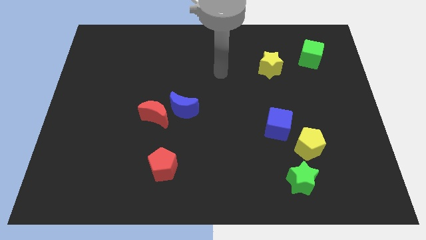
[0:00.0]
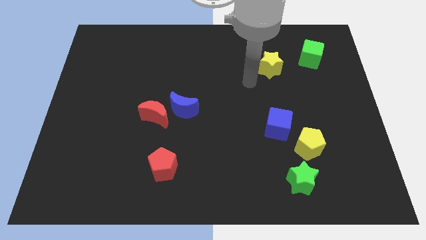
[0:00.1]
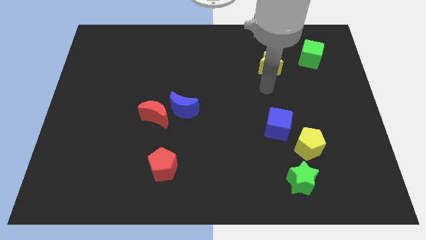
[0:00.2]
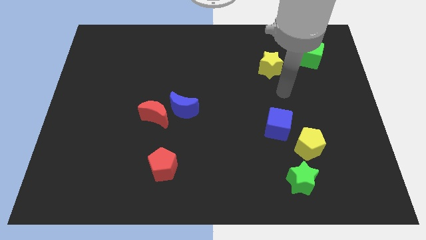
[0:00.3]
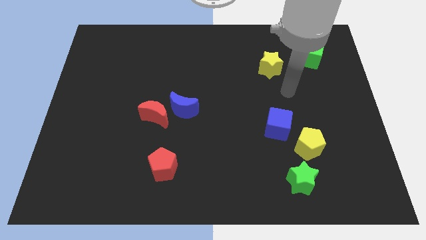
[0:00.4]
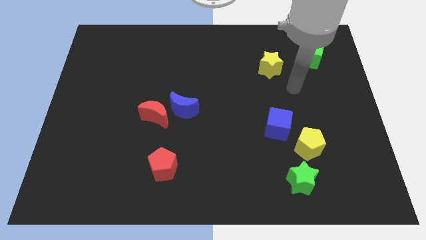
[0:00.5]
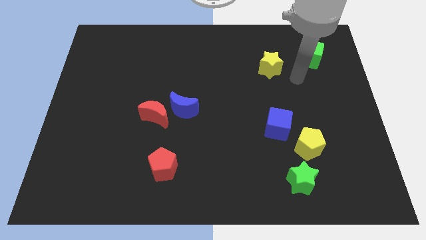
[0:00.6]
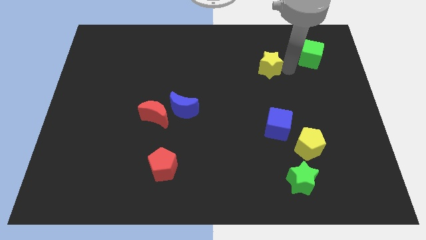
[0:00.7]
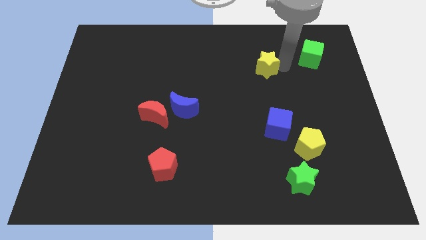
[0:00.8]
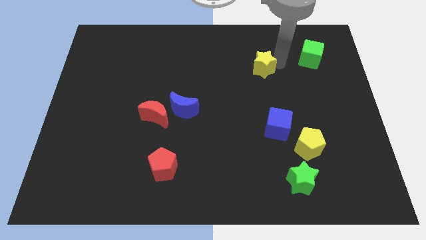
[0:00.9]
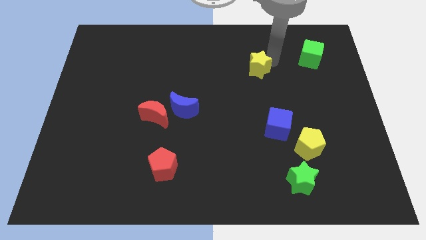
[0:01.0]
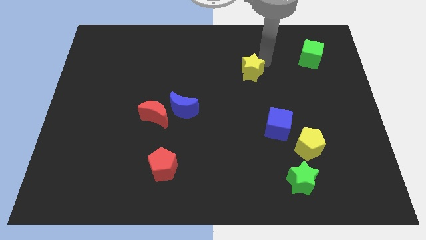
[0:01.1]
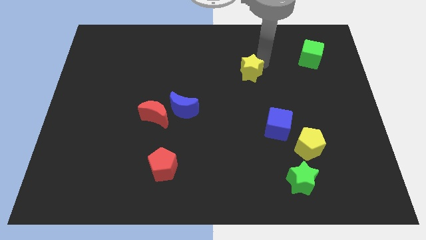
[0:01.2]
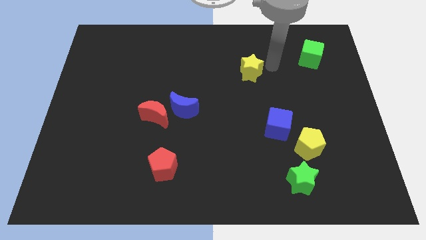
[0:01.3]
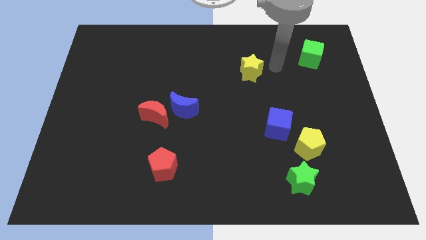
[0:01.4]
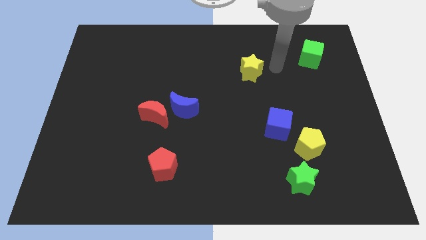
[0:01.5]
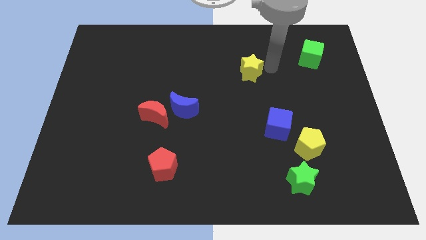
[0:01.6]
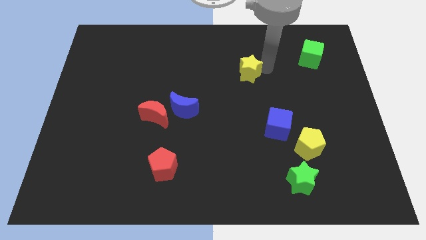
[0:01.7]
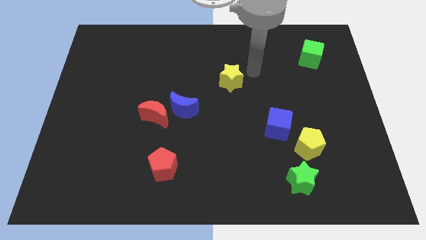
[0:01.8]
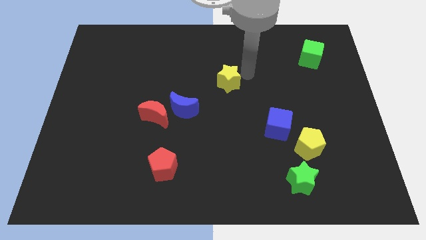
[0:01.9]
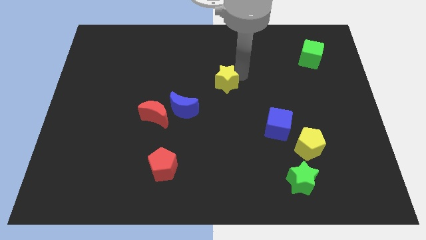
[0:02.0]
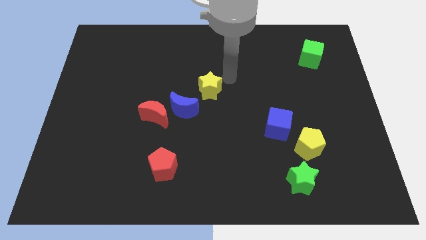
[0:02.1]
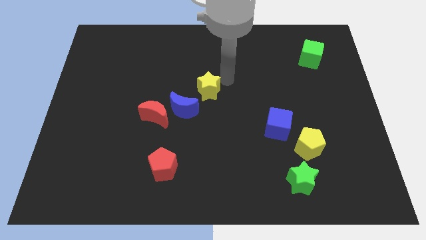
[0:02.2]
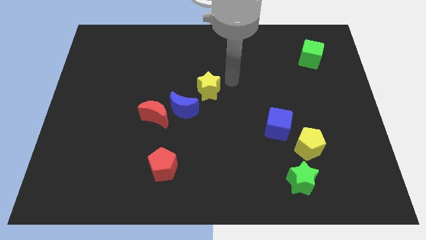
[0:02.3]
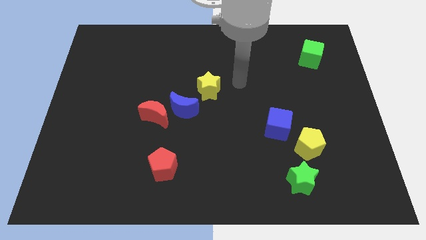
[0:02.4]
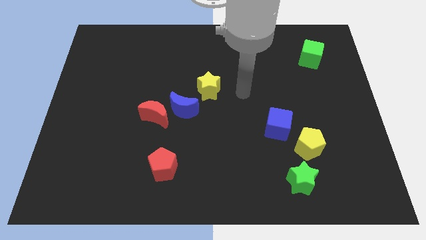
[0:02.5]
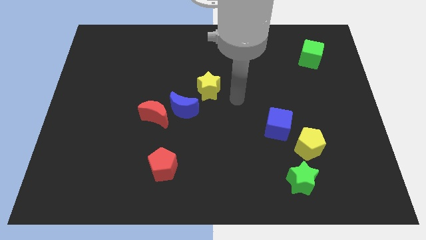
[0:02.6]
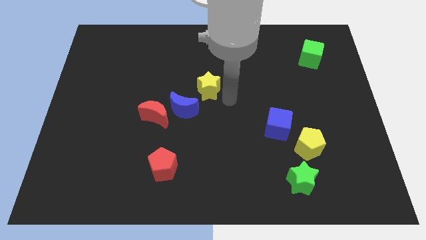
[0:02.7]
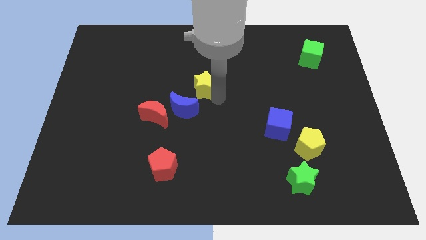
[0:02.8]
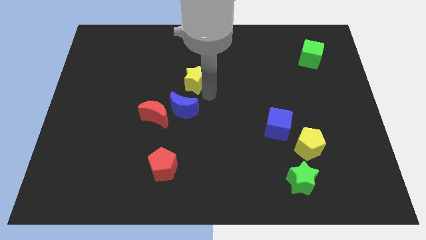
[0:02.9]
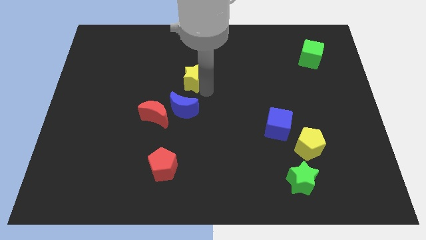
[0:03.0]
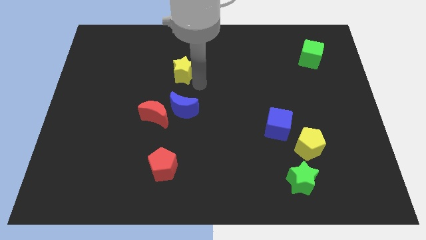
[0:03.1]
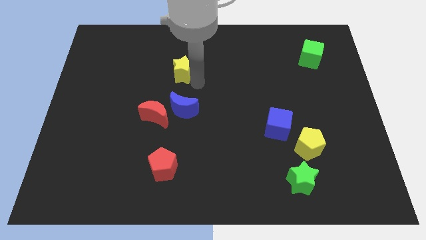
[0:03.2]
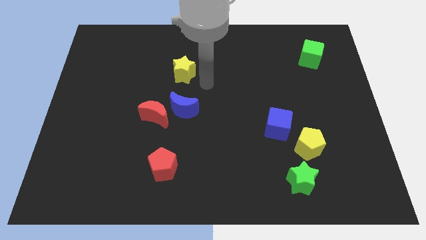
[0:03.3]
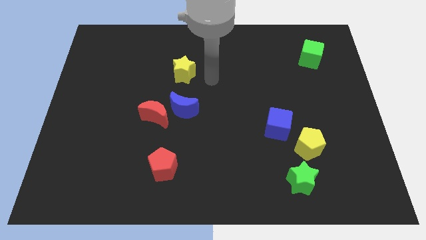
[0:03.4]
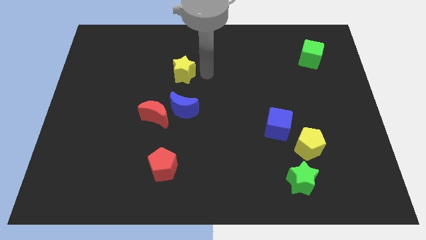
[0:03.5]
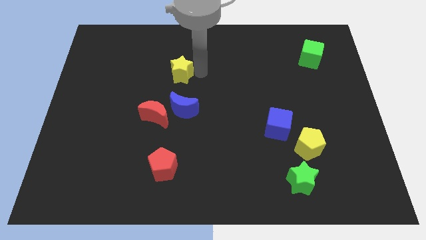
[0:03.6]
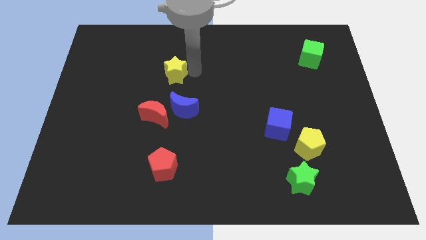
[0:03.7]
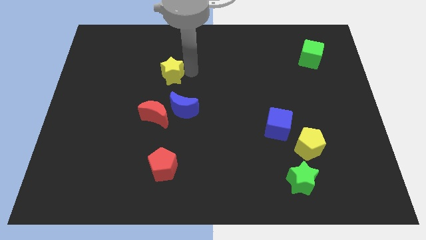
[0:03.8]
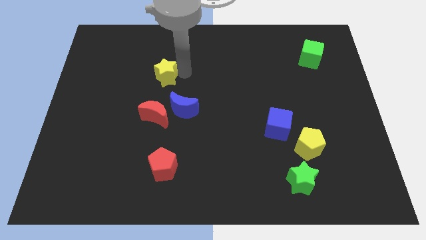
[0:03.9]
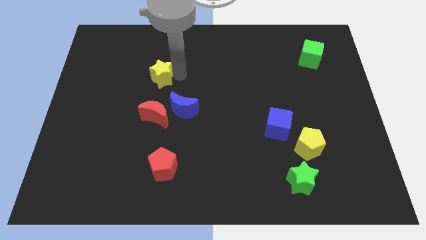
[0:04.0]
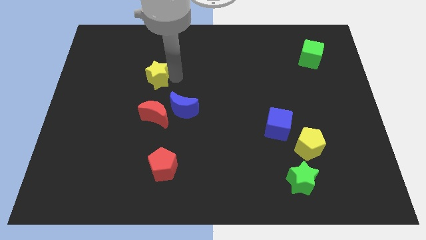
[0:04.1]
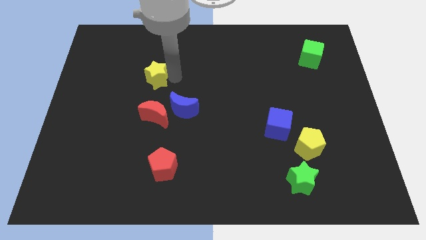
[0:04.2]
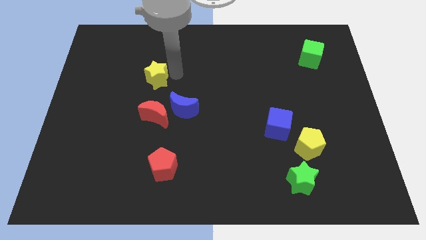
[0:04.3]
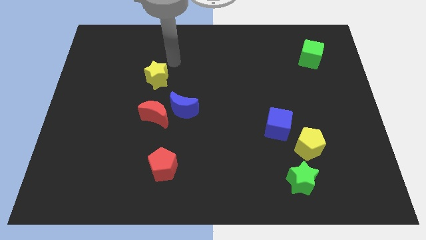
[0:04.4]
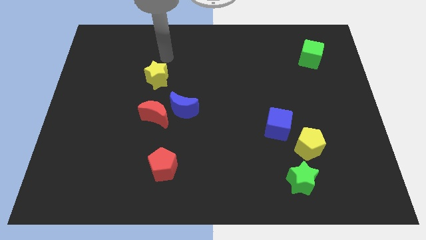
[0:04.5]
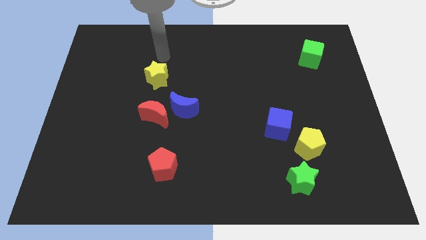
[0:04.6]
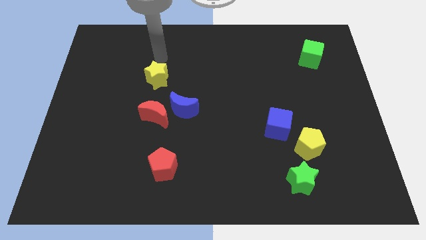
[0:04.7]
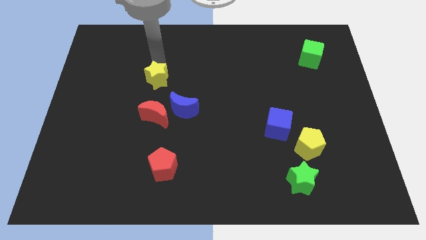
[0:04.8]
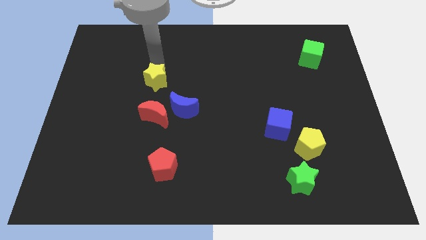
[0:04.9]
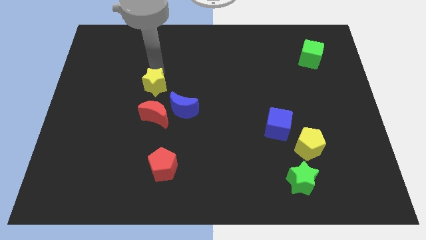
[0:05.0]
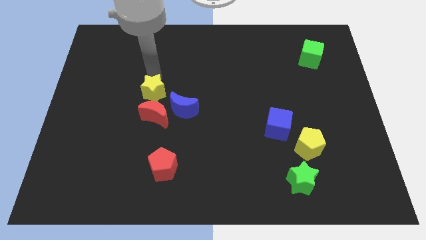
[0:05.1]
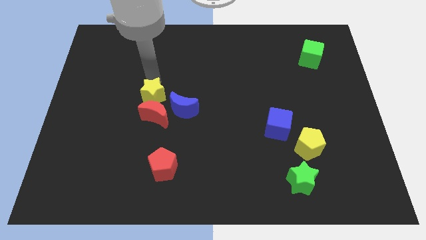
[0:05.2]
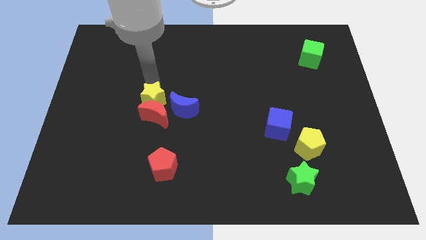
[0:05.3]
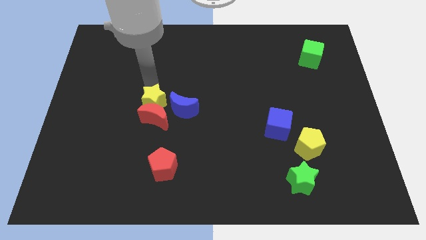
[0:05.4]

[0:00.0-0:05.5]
move the yellow star next to the red moon

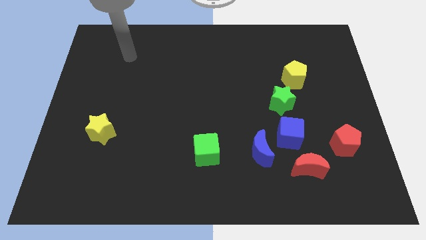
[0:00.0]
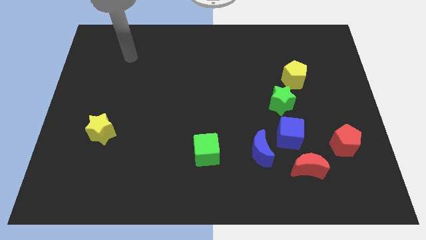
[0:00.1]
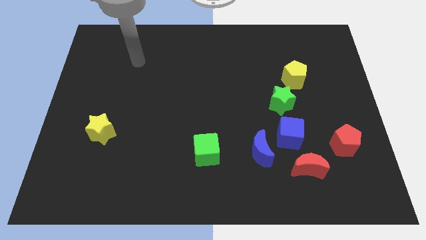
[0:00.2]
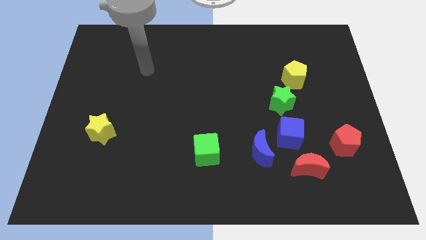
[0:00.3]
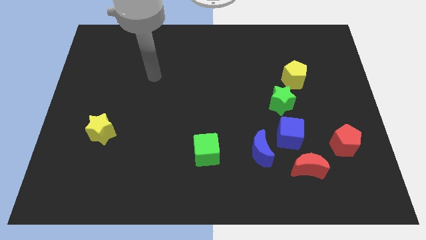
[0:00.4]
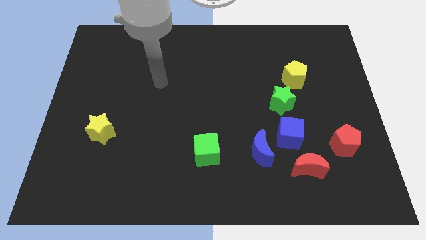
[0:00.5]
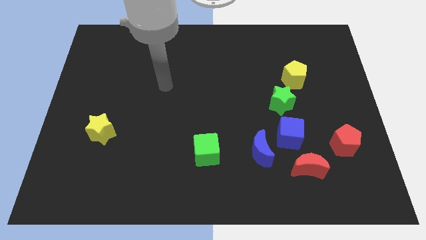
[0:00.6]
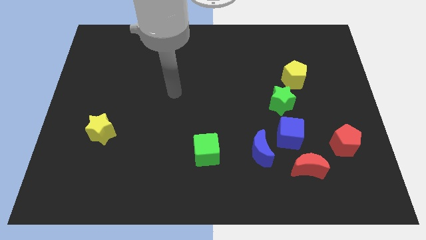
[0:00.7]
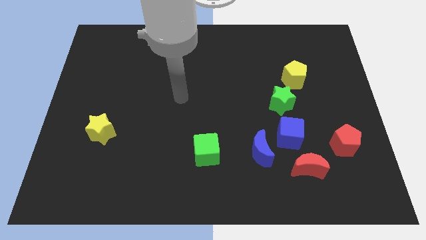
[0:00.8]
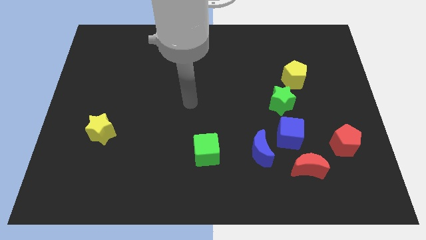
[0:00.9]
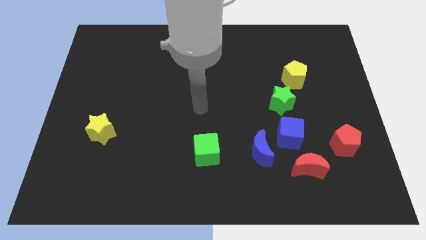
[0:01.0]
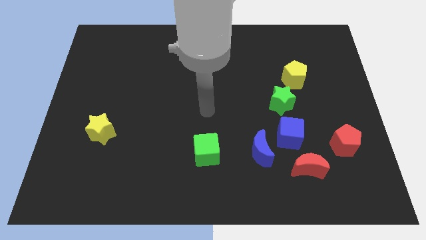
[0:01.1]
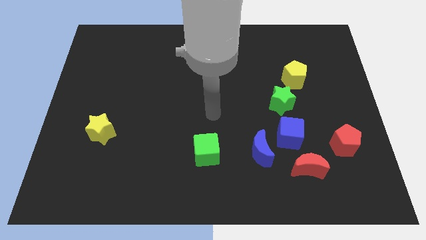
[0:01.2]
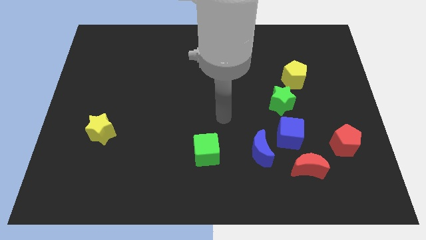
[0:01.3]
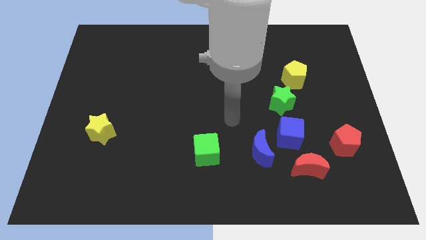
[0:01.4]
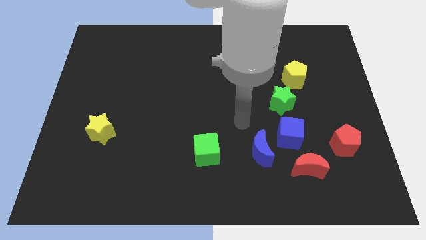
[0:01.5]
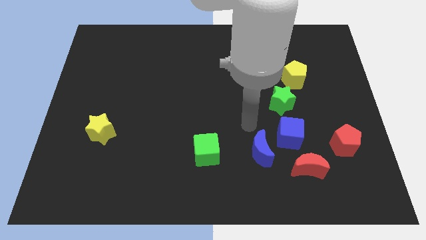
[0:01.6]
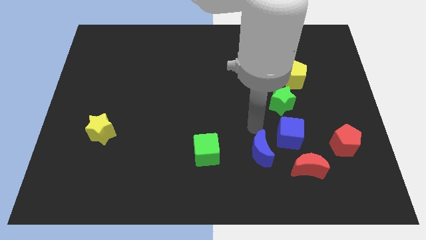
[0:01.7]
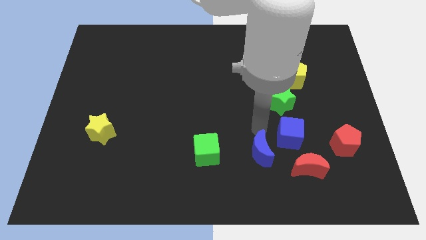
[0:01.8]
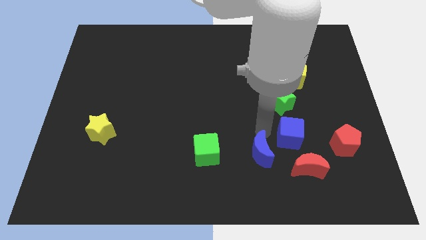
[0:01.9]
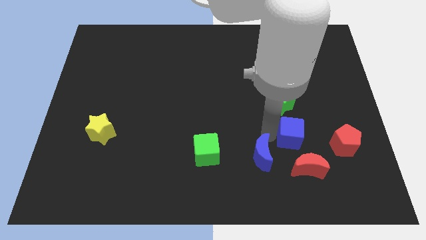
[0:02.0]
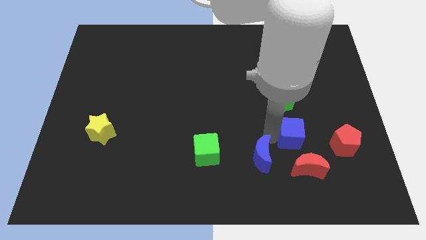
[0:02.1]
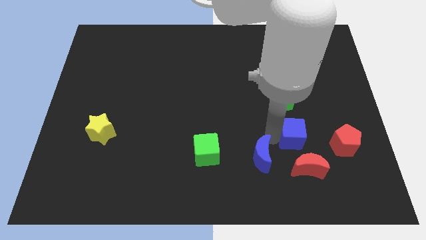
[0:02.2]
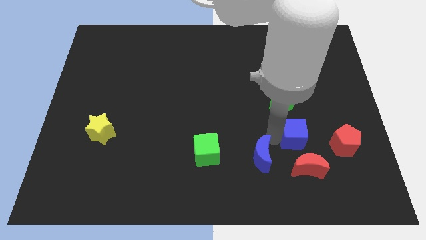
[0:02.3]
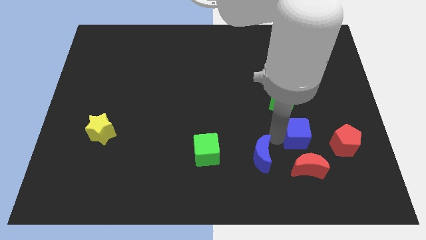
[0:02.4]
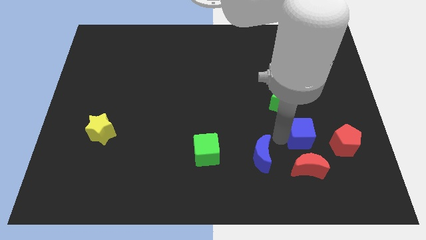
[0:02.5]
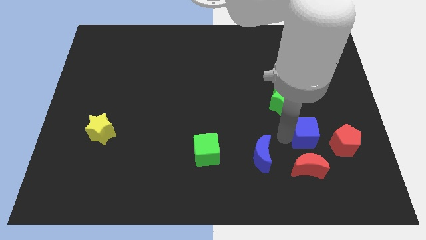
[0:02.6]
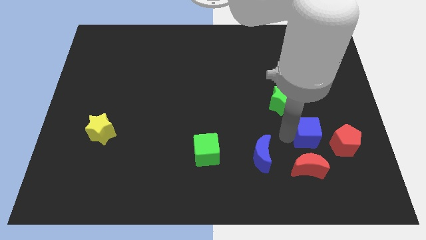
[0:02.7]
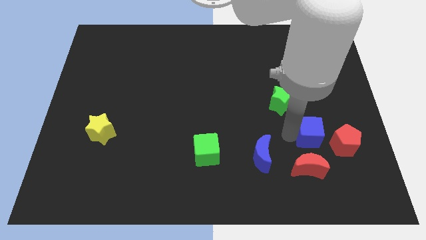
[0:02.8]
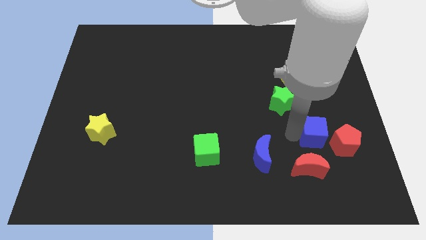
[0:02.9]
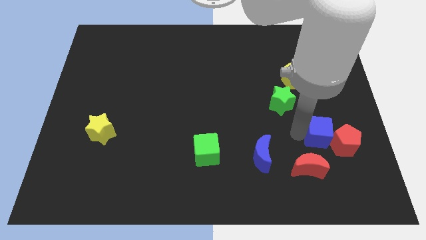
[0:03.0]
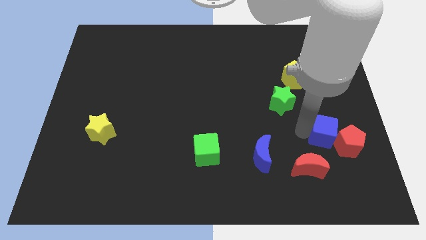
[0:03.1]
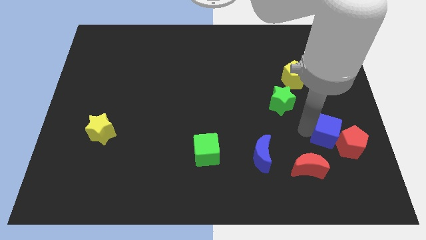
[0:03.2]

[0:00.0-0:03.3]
slide the blue cube to the red pentagon

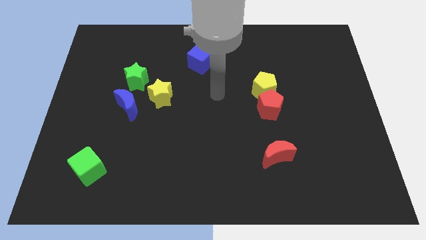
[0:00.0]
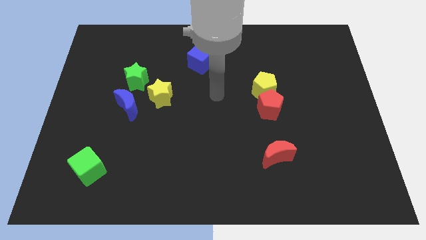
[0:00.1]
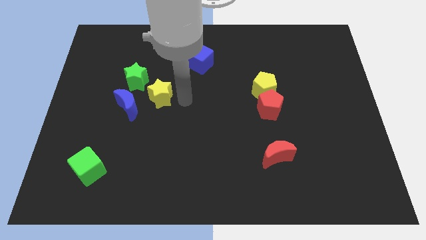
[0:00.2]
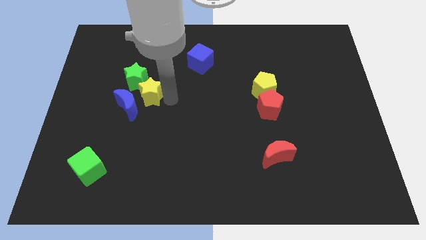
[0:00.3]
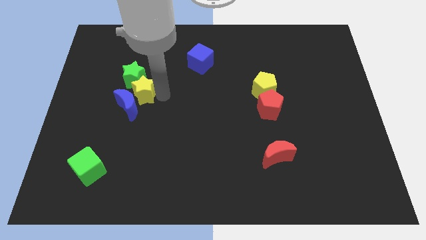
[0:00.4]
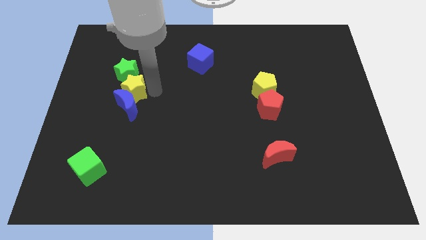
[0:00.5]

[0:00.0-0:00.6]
put the yellow star close to the green star
